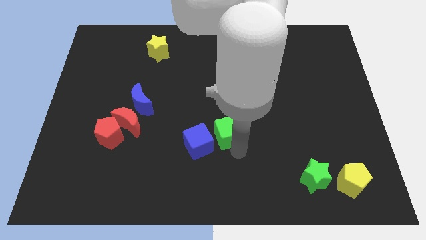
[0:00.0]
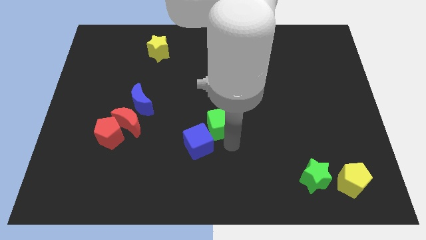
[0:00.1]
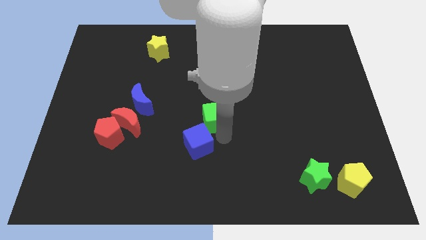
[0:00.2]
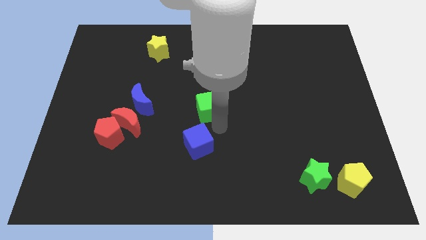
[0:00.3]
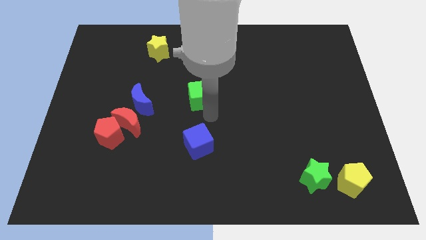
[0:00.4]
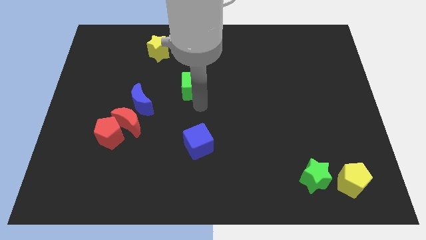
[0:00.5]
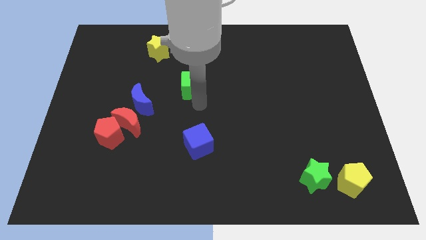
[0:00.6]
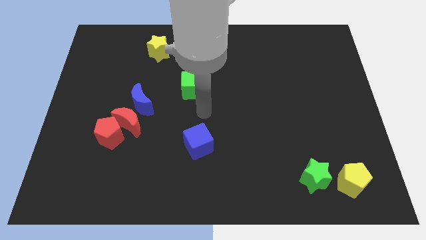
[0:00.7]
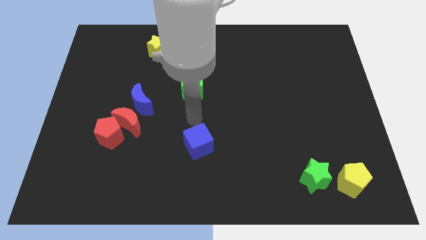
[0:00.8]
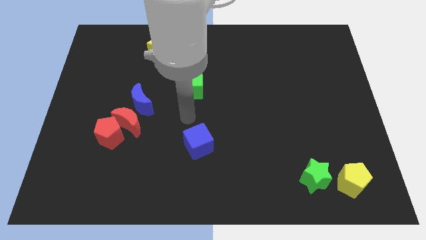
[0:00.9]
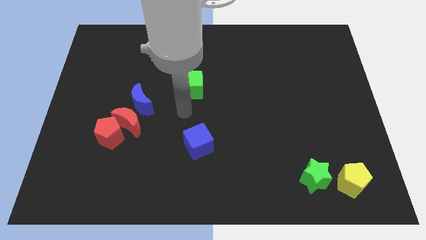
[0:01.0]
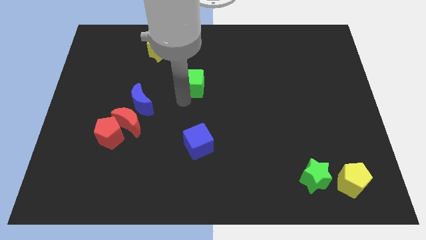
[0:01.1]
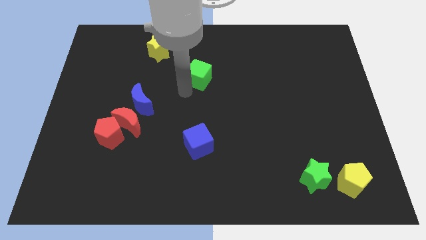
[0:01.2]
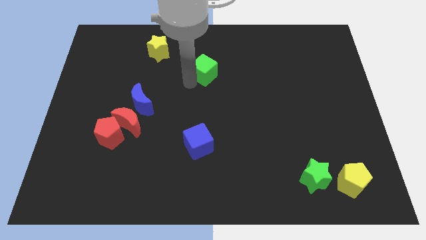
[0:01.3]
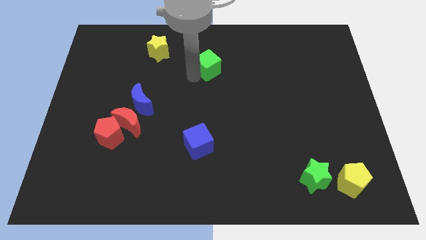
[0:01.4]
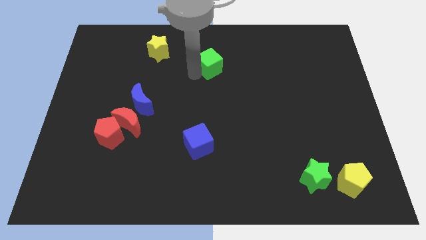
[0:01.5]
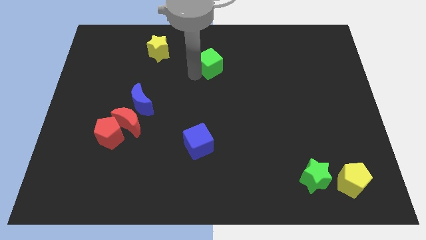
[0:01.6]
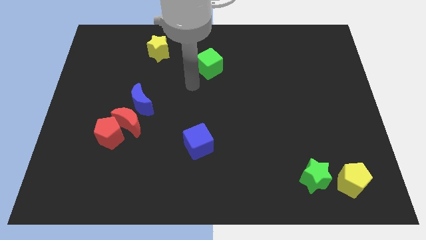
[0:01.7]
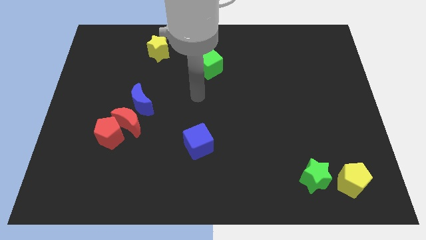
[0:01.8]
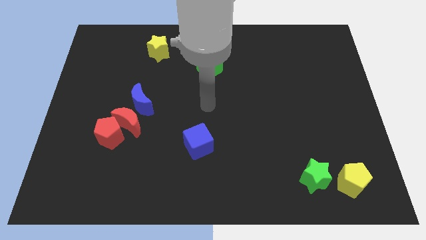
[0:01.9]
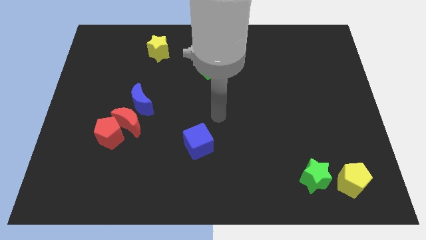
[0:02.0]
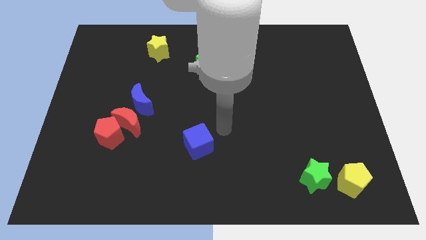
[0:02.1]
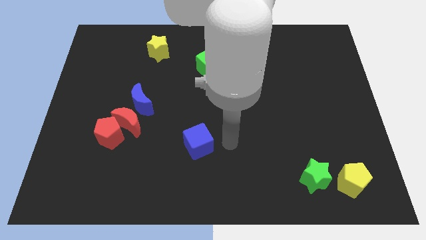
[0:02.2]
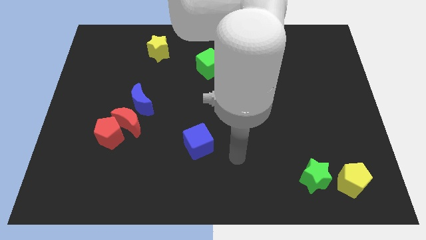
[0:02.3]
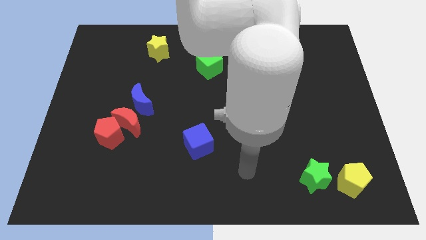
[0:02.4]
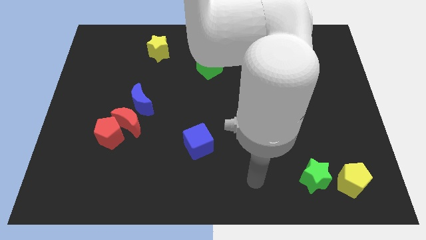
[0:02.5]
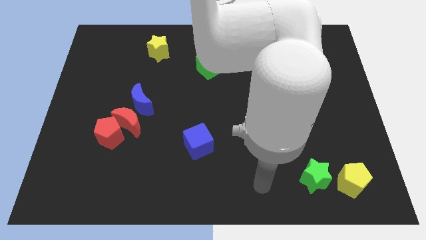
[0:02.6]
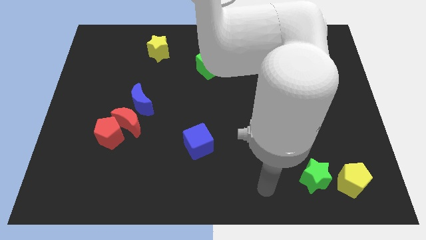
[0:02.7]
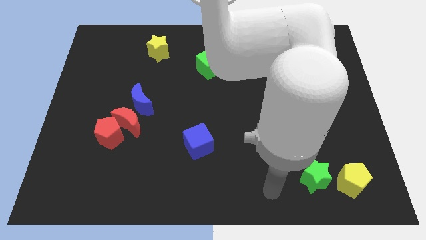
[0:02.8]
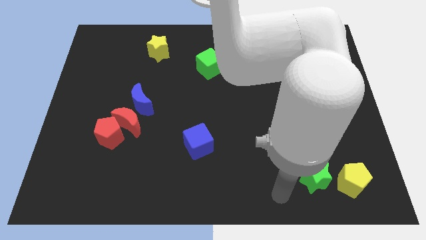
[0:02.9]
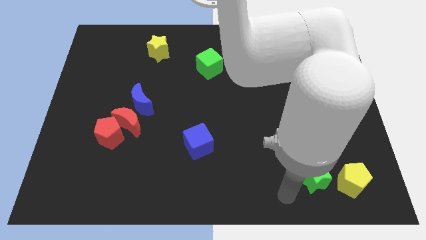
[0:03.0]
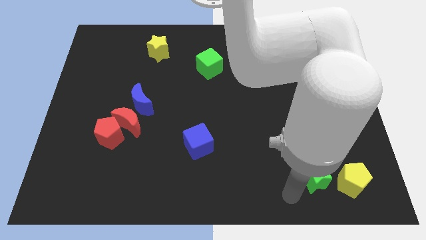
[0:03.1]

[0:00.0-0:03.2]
move green cube to the bottom right of yellow star

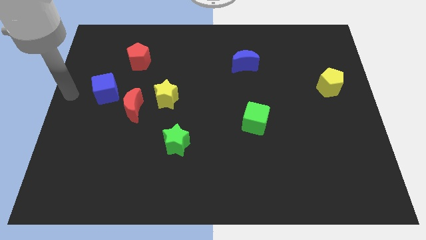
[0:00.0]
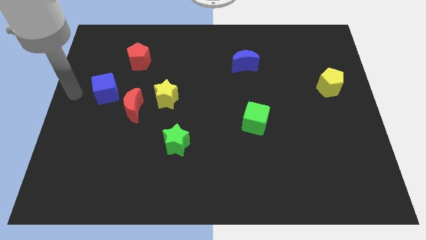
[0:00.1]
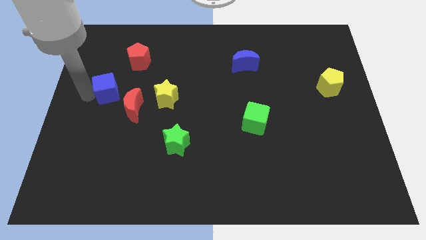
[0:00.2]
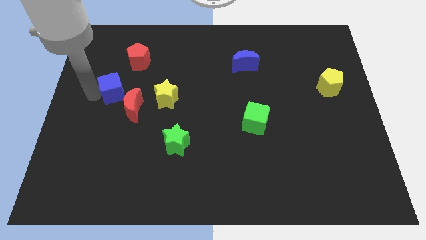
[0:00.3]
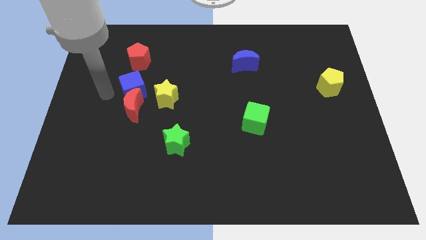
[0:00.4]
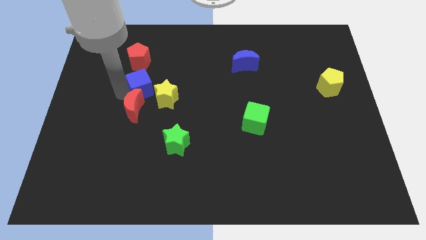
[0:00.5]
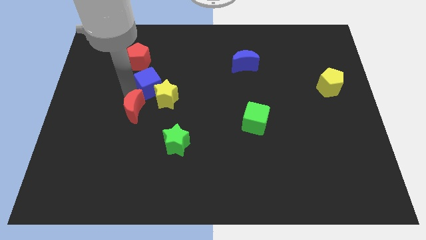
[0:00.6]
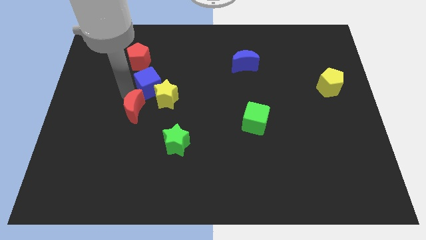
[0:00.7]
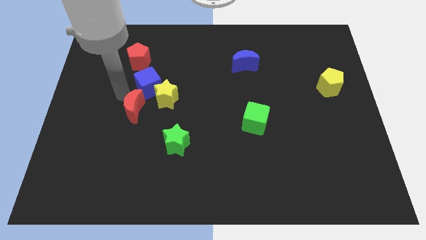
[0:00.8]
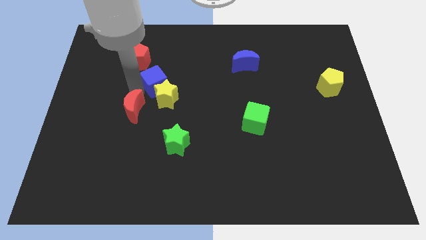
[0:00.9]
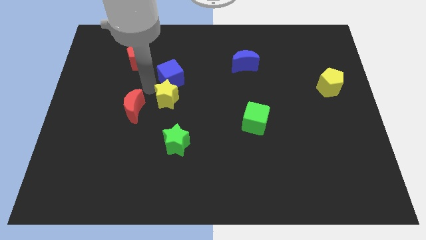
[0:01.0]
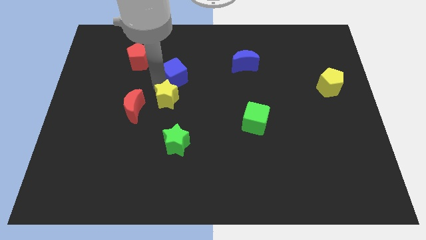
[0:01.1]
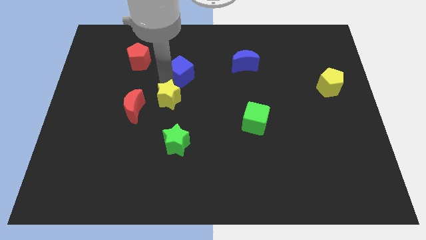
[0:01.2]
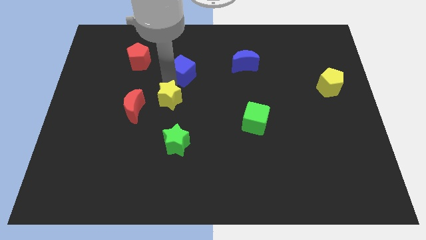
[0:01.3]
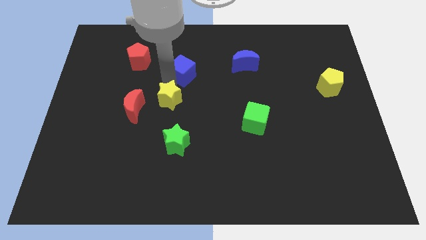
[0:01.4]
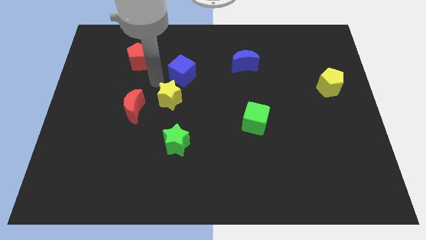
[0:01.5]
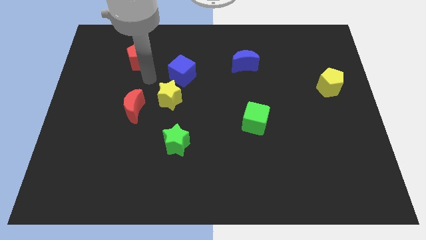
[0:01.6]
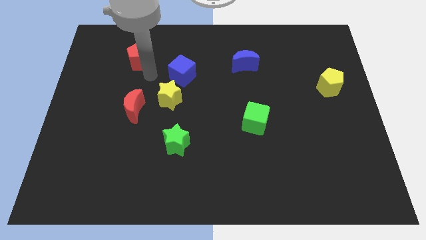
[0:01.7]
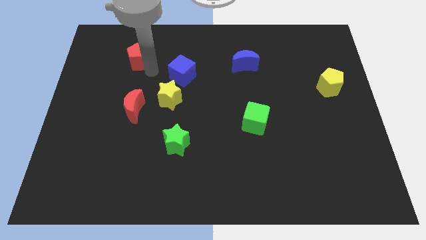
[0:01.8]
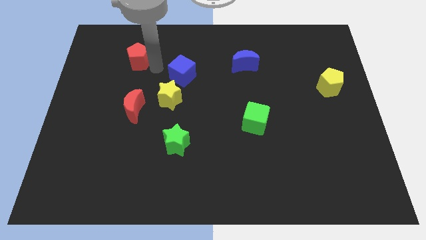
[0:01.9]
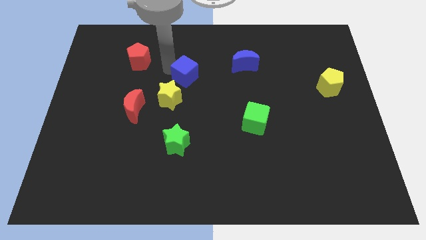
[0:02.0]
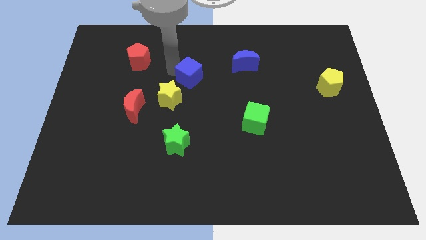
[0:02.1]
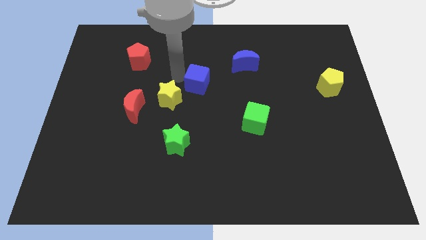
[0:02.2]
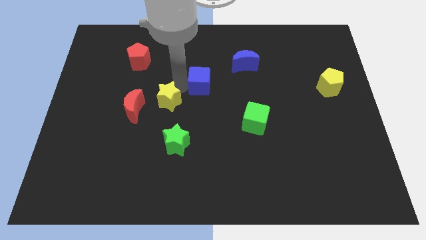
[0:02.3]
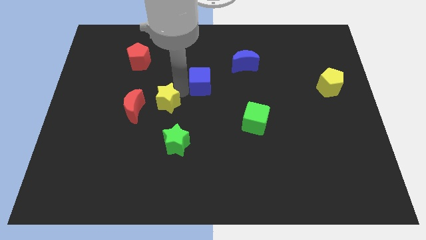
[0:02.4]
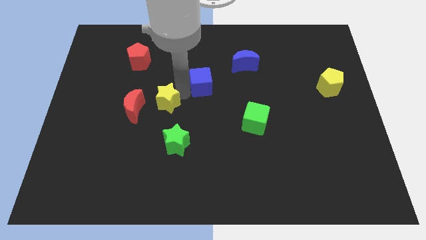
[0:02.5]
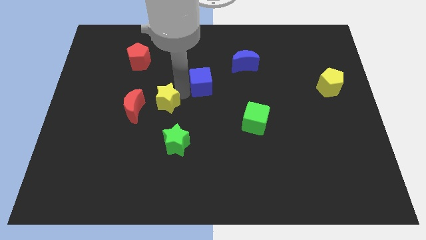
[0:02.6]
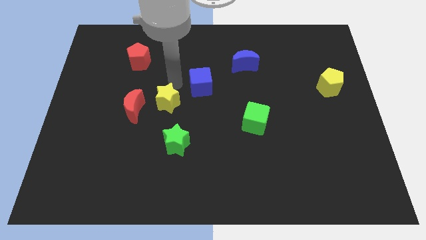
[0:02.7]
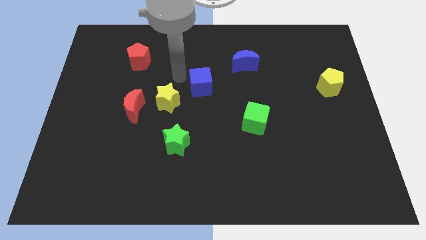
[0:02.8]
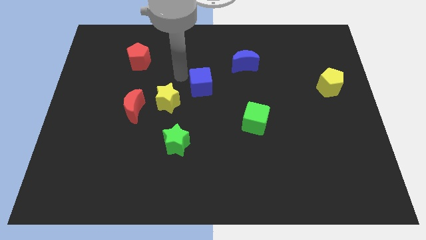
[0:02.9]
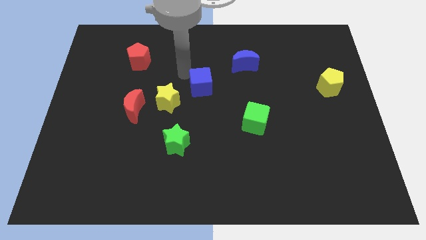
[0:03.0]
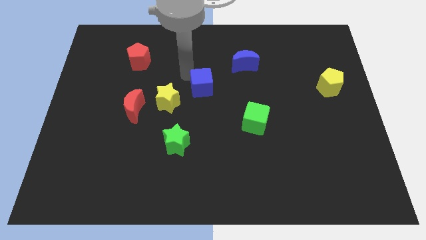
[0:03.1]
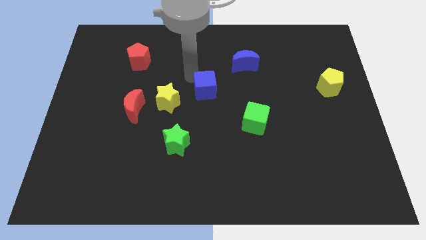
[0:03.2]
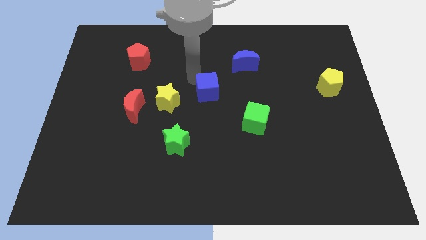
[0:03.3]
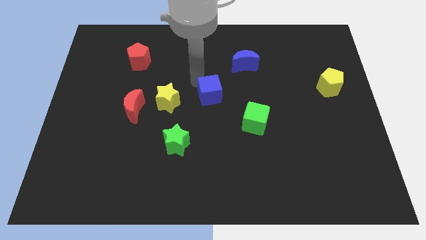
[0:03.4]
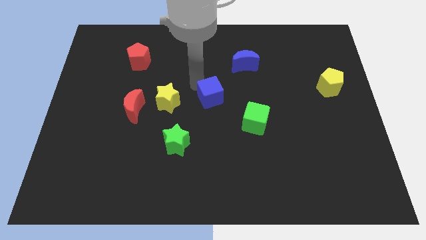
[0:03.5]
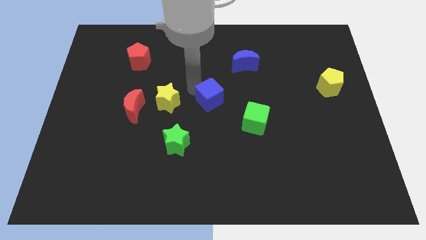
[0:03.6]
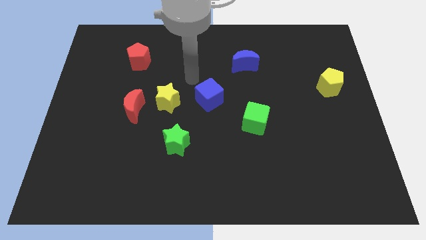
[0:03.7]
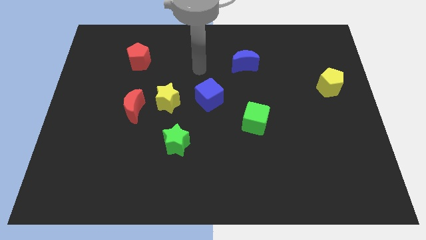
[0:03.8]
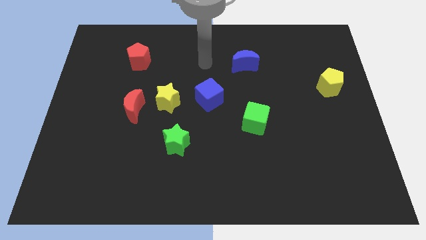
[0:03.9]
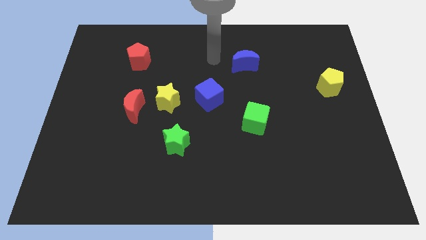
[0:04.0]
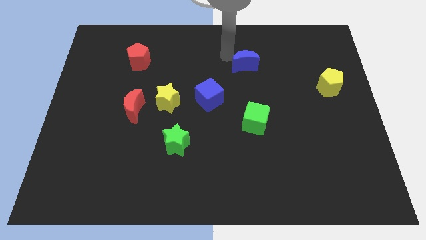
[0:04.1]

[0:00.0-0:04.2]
move the blue cube diagonally to blue crescent

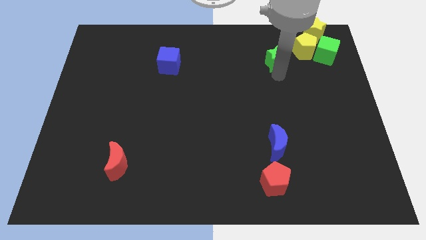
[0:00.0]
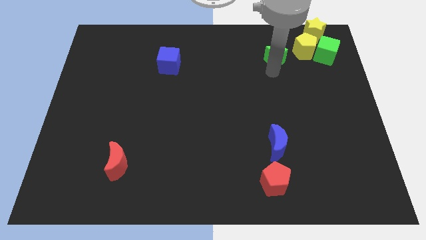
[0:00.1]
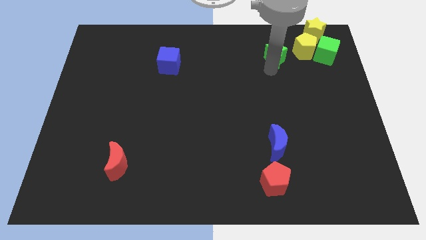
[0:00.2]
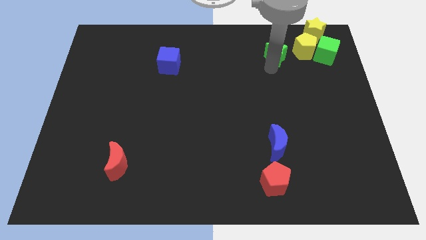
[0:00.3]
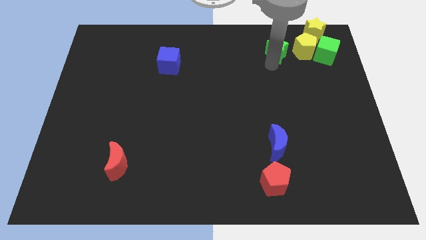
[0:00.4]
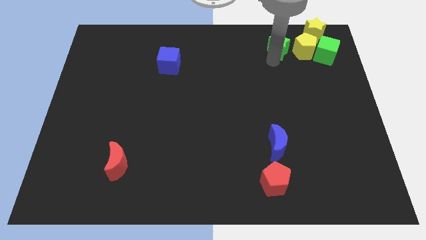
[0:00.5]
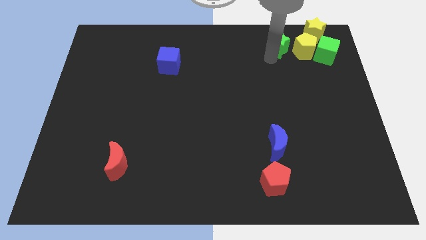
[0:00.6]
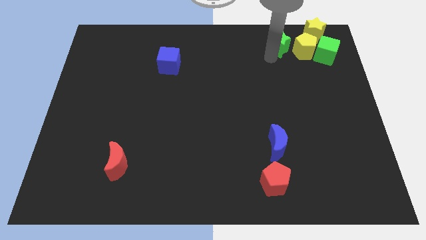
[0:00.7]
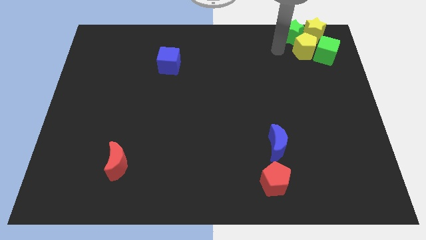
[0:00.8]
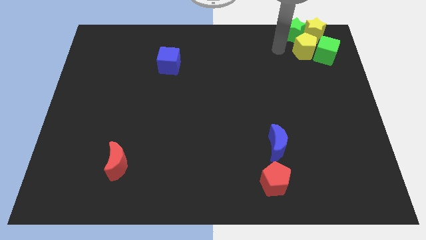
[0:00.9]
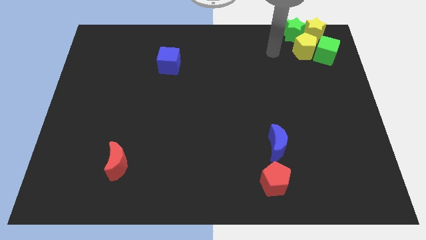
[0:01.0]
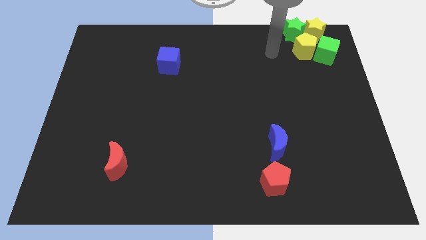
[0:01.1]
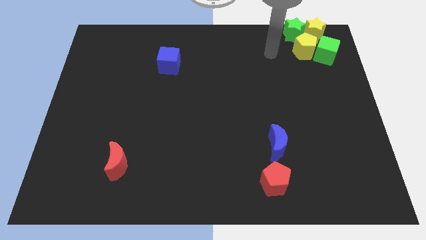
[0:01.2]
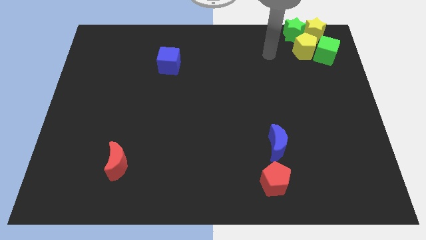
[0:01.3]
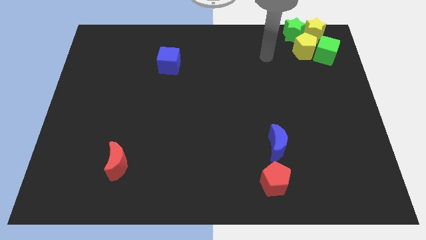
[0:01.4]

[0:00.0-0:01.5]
place green star to the left side of the yellow star

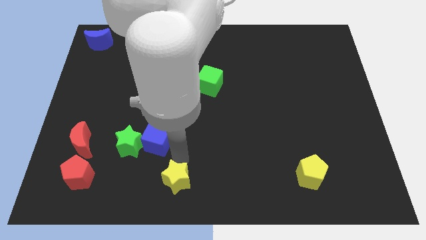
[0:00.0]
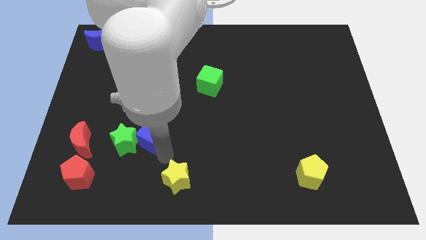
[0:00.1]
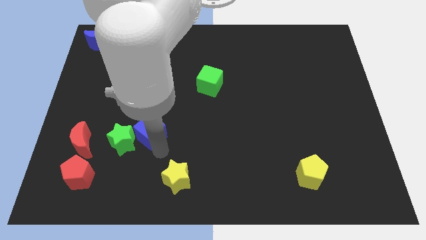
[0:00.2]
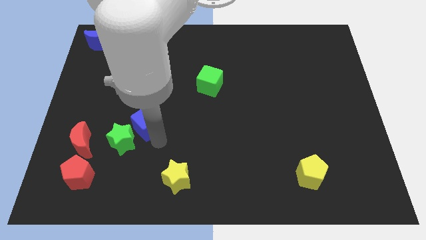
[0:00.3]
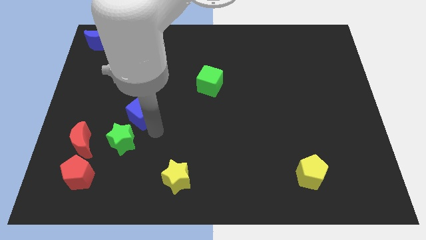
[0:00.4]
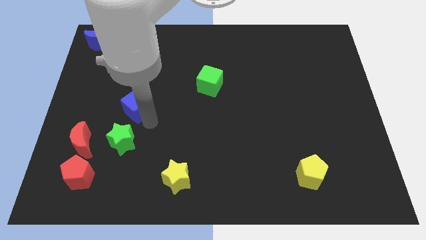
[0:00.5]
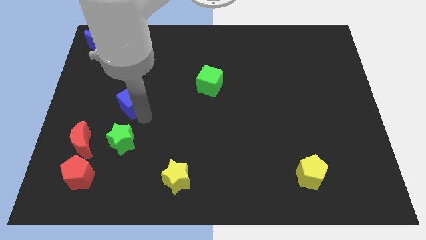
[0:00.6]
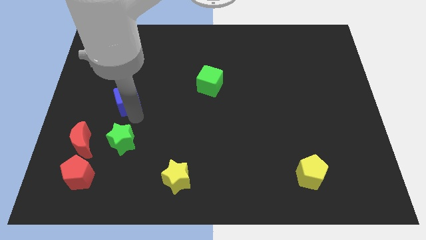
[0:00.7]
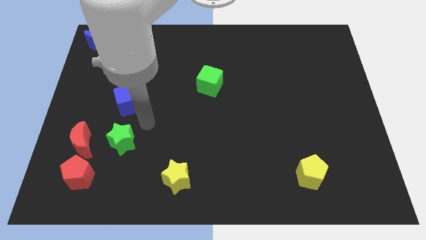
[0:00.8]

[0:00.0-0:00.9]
place blue cube to the top pf green star
